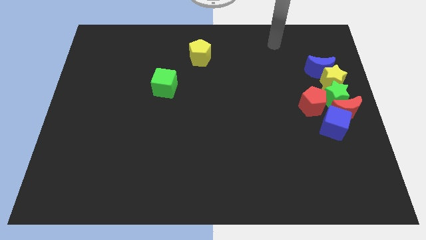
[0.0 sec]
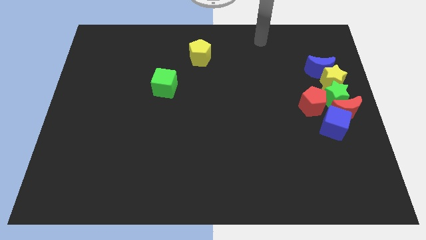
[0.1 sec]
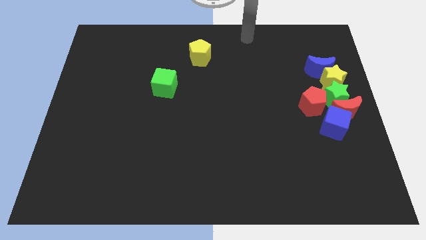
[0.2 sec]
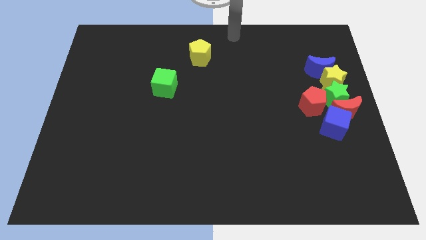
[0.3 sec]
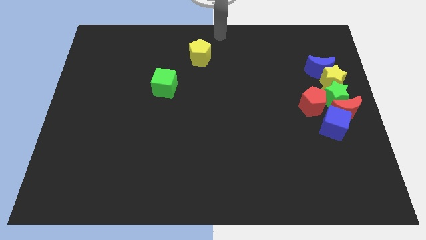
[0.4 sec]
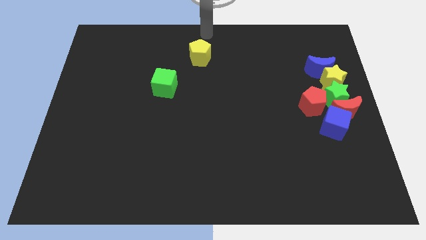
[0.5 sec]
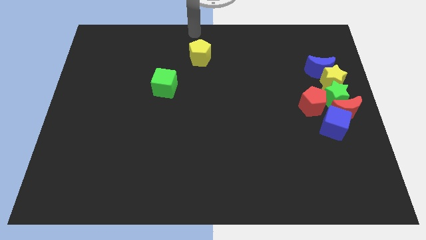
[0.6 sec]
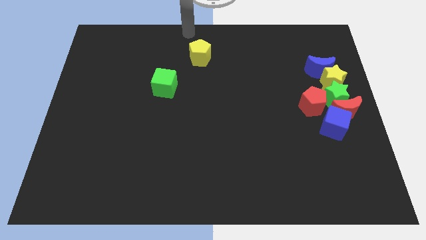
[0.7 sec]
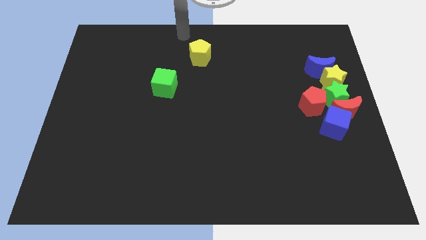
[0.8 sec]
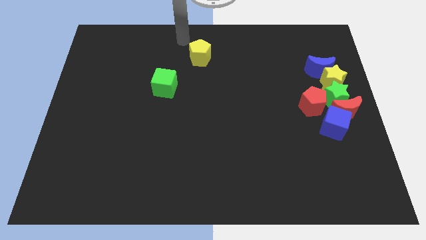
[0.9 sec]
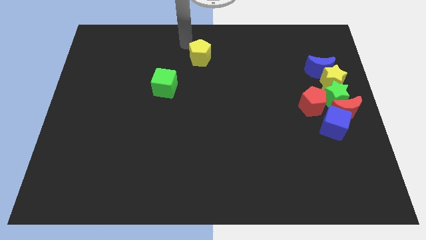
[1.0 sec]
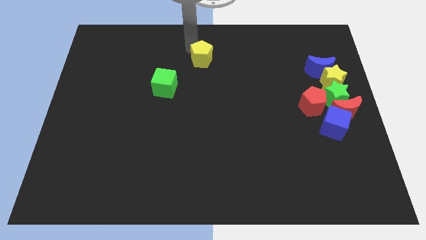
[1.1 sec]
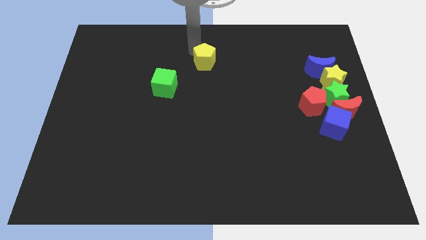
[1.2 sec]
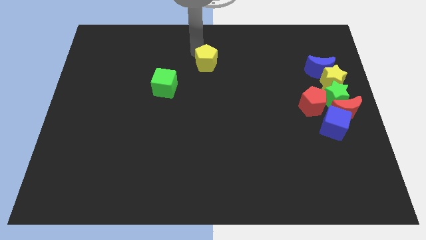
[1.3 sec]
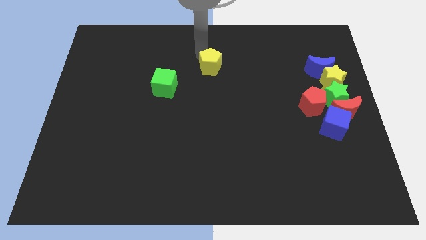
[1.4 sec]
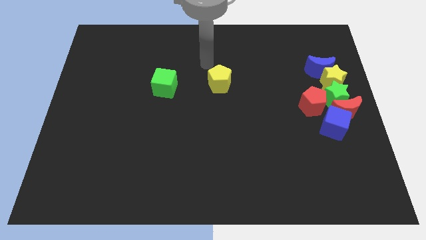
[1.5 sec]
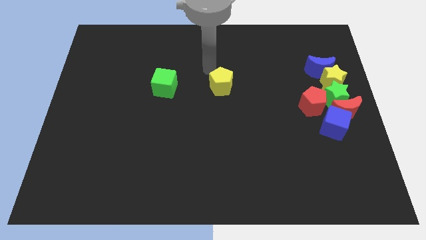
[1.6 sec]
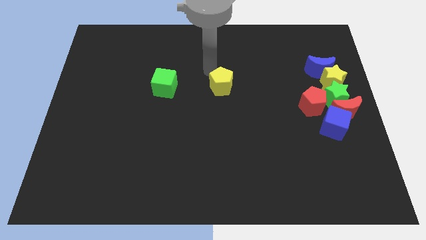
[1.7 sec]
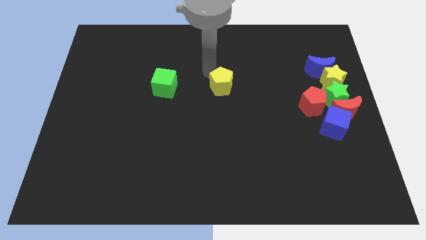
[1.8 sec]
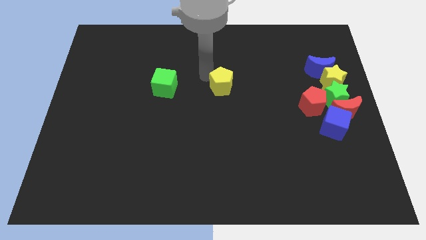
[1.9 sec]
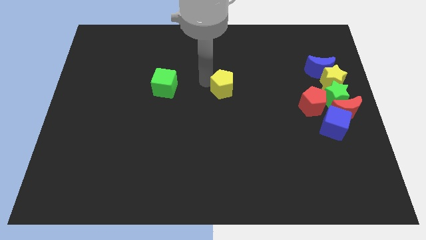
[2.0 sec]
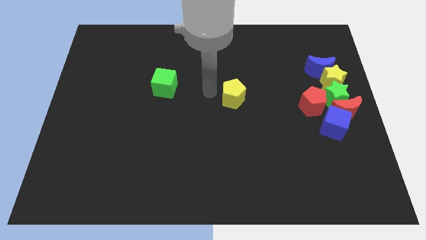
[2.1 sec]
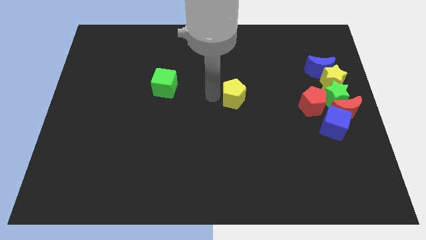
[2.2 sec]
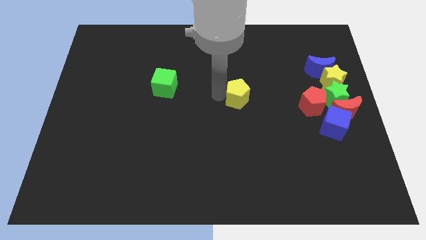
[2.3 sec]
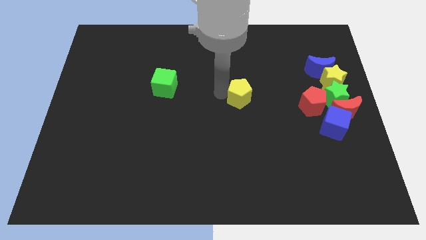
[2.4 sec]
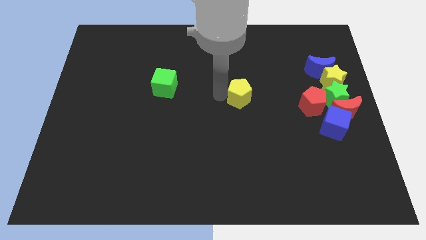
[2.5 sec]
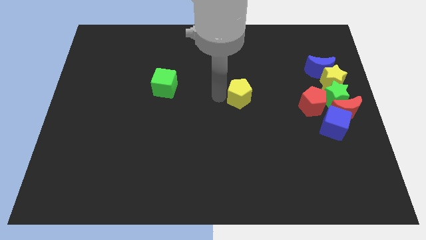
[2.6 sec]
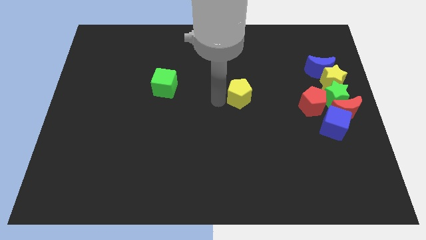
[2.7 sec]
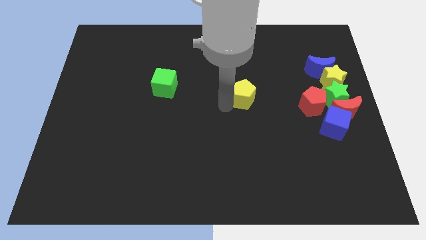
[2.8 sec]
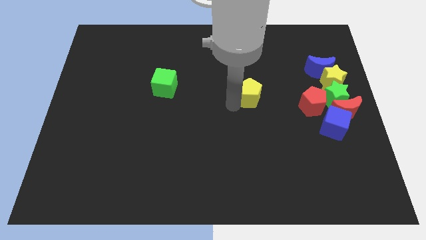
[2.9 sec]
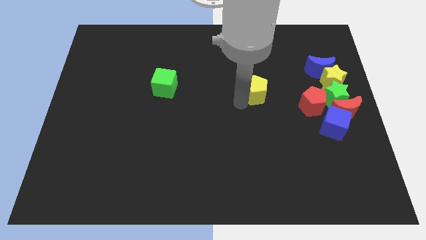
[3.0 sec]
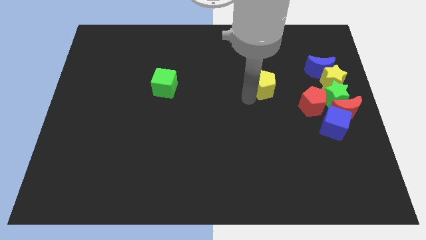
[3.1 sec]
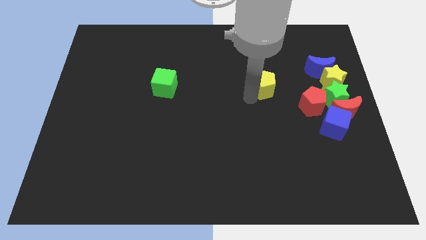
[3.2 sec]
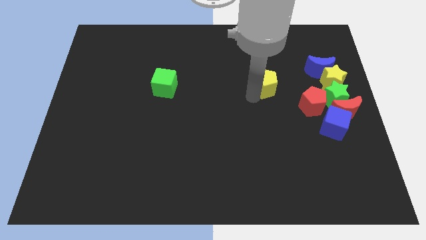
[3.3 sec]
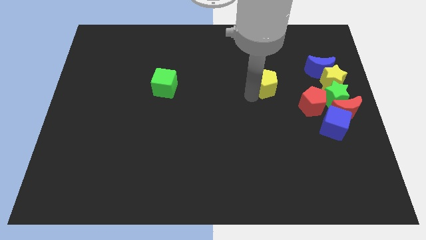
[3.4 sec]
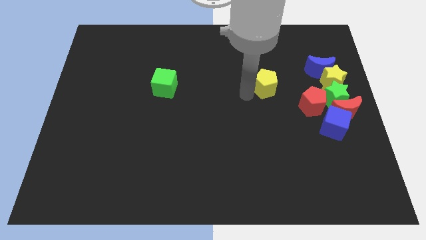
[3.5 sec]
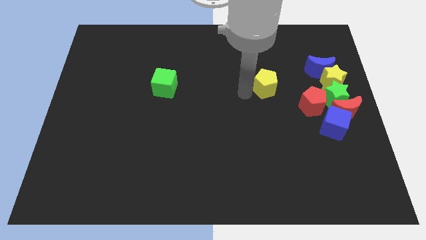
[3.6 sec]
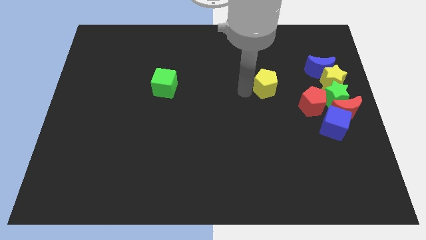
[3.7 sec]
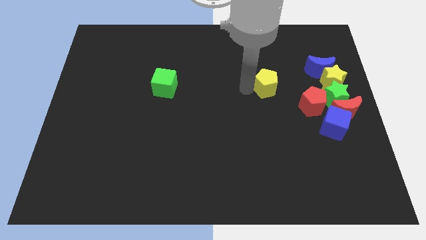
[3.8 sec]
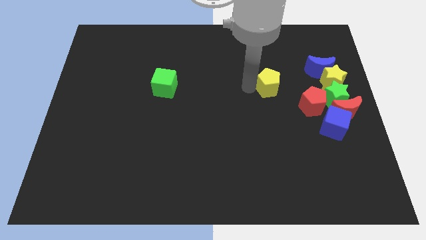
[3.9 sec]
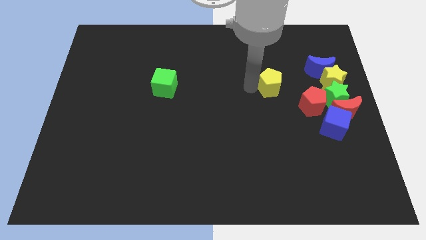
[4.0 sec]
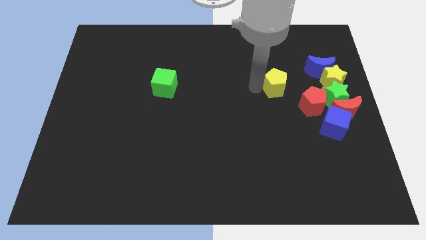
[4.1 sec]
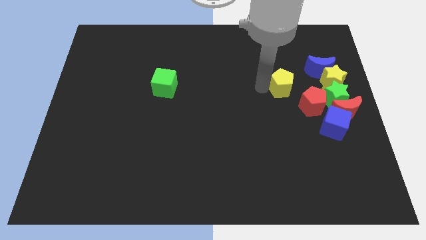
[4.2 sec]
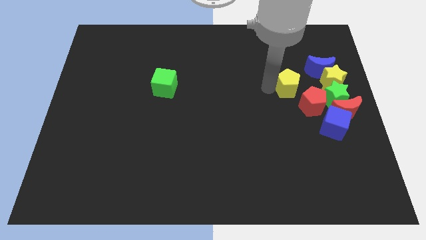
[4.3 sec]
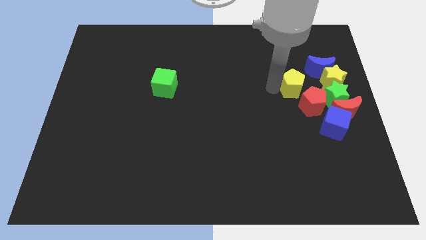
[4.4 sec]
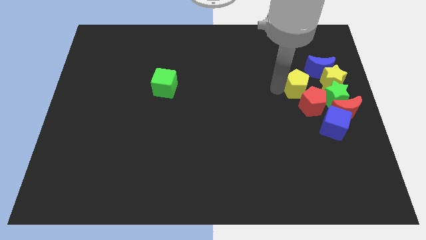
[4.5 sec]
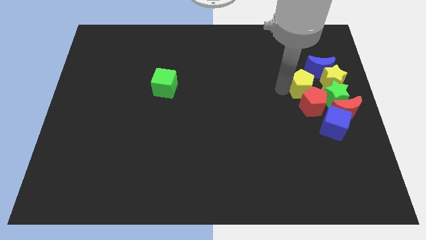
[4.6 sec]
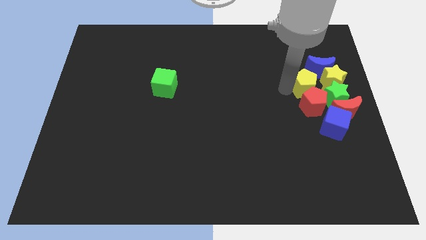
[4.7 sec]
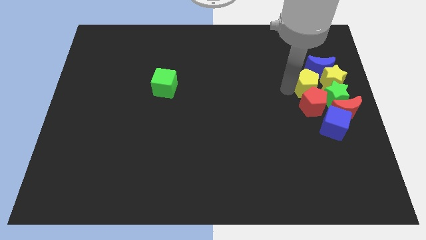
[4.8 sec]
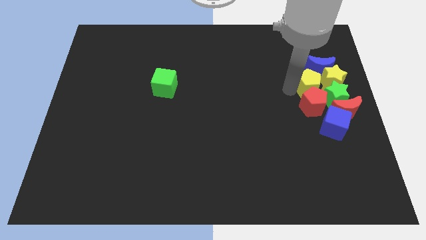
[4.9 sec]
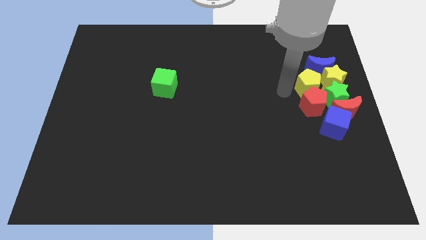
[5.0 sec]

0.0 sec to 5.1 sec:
push the yellow pentagon to the top of the red pentagon

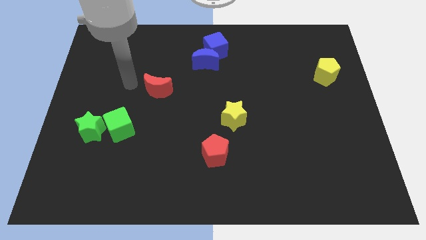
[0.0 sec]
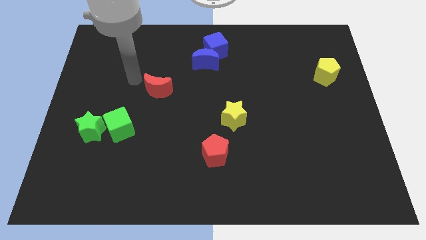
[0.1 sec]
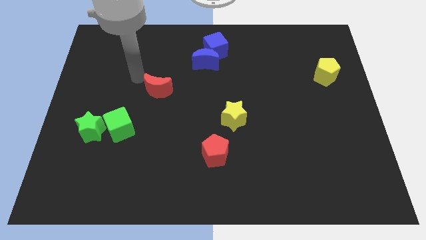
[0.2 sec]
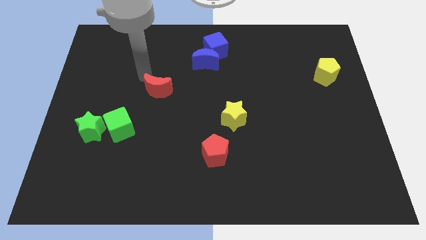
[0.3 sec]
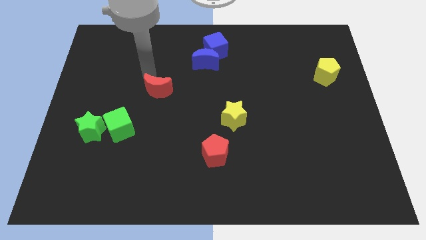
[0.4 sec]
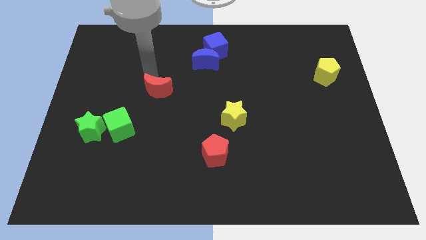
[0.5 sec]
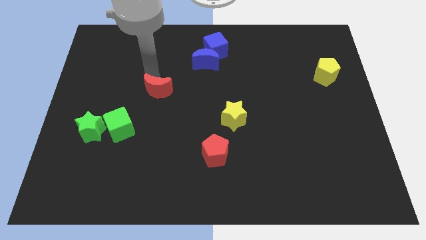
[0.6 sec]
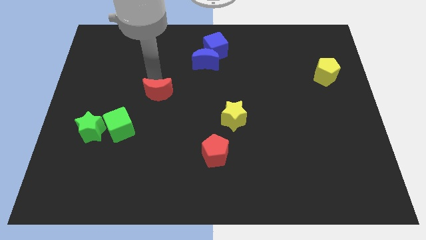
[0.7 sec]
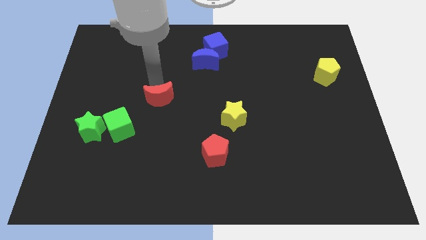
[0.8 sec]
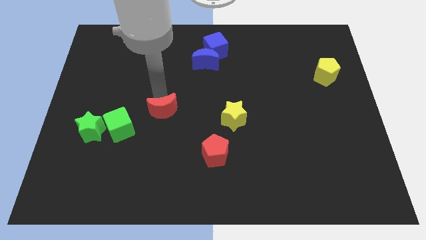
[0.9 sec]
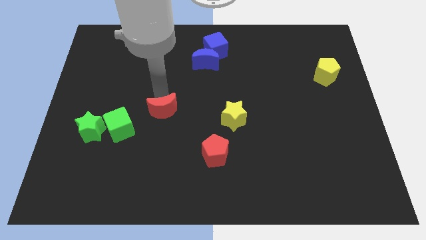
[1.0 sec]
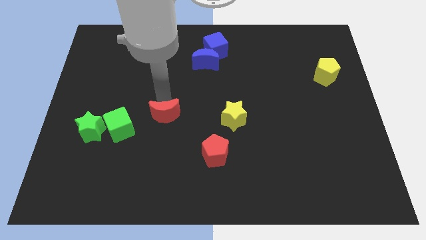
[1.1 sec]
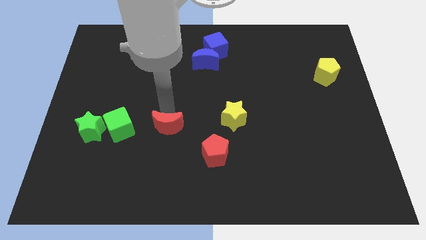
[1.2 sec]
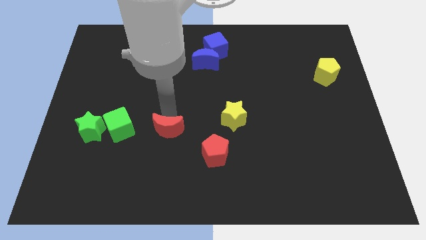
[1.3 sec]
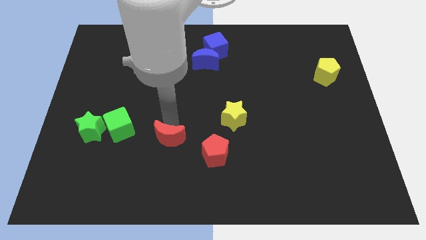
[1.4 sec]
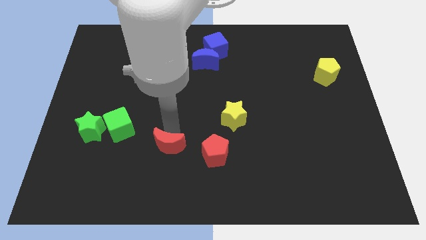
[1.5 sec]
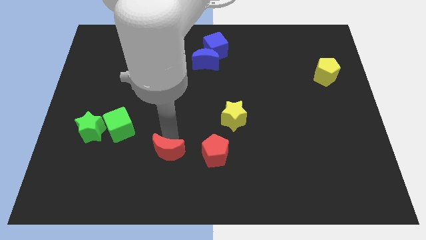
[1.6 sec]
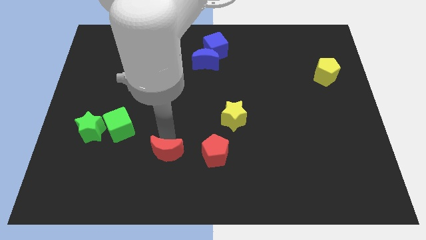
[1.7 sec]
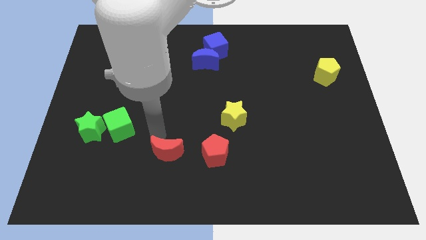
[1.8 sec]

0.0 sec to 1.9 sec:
move the red crescent horizontally left to the red pentagon

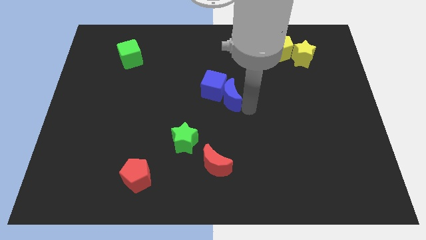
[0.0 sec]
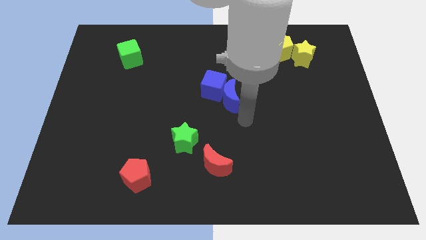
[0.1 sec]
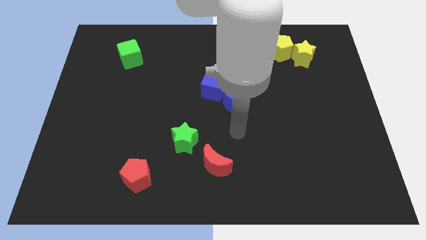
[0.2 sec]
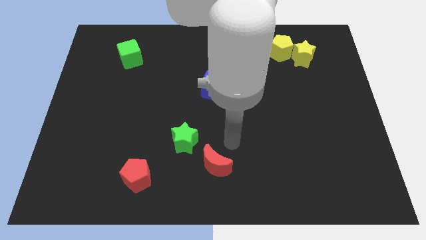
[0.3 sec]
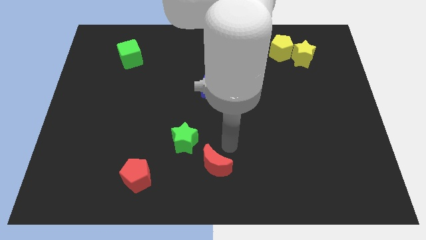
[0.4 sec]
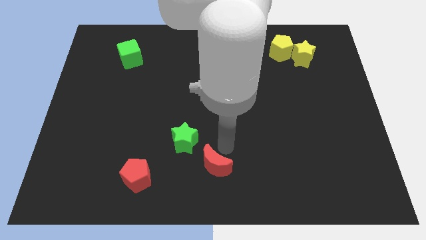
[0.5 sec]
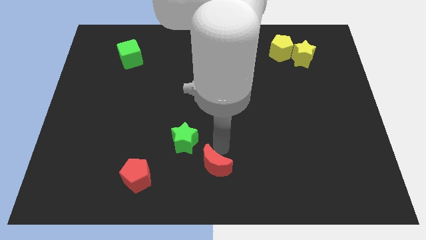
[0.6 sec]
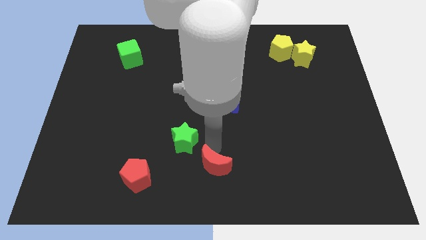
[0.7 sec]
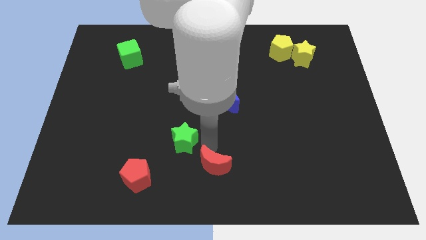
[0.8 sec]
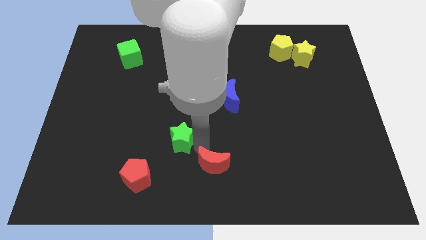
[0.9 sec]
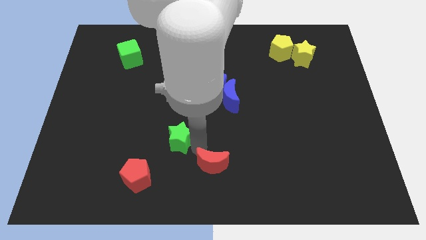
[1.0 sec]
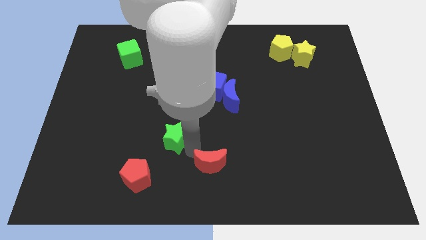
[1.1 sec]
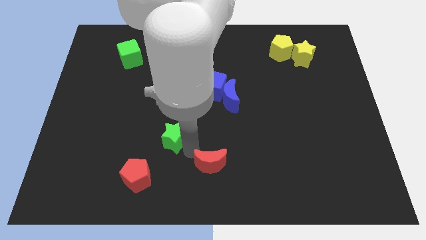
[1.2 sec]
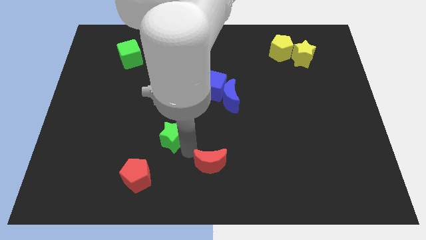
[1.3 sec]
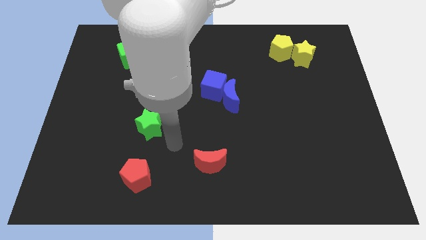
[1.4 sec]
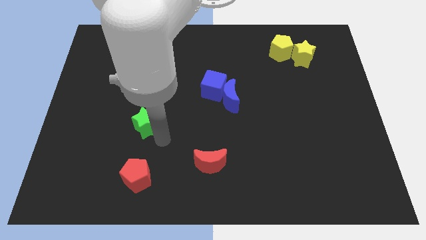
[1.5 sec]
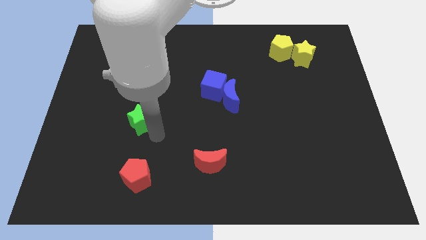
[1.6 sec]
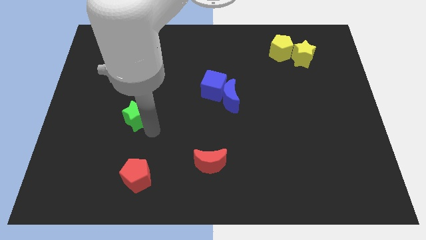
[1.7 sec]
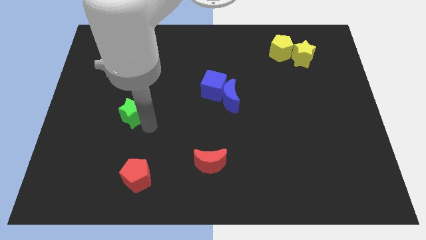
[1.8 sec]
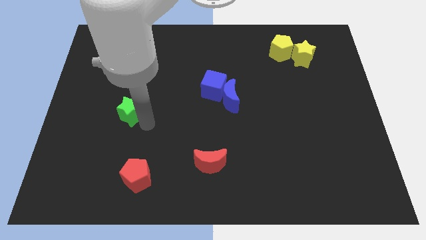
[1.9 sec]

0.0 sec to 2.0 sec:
move the green star towards the top left
